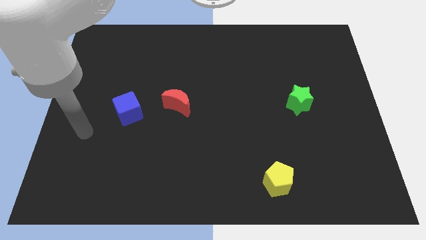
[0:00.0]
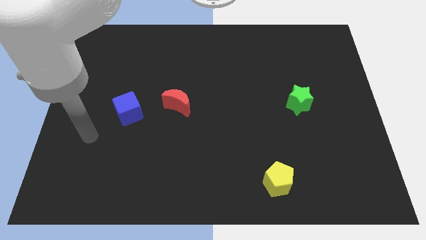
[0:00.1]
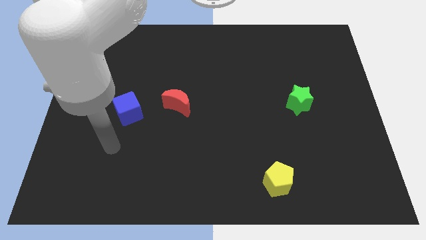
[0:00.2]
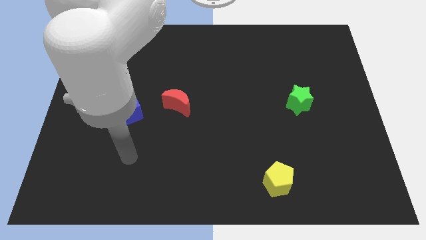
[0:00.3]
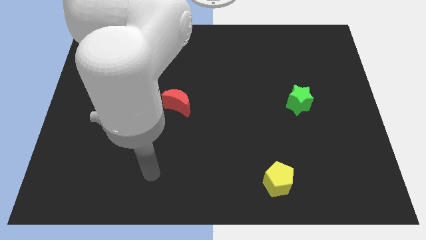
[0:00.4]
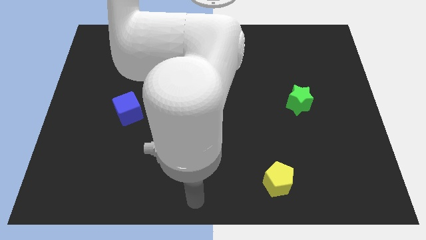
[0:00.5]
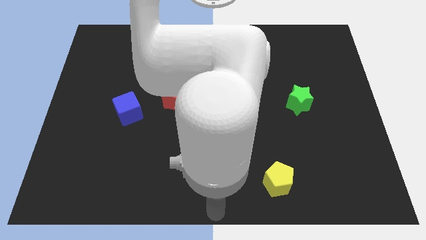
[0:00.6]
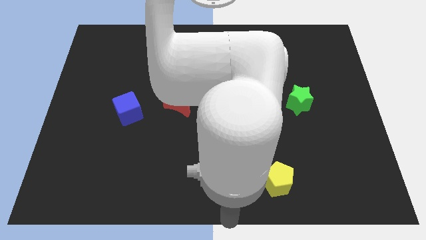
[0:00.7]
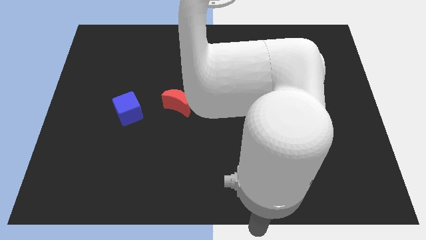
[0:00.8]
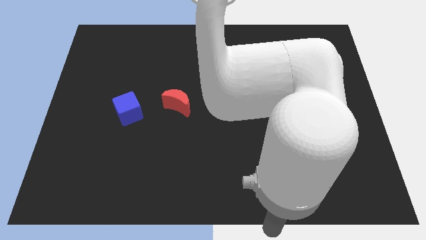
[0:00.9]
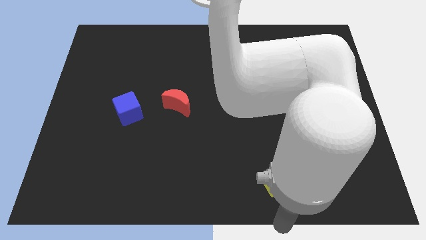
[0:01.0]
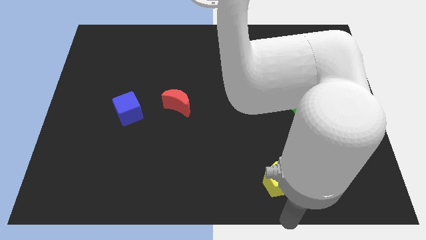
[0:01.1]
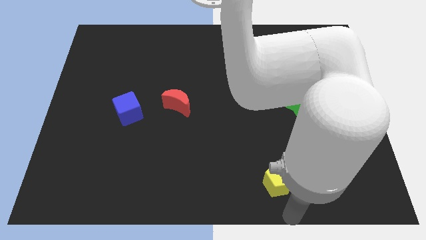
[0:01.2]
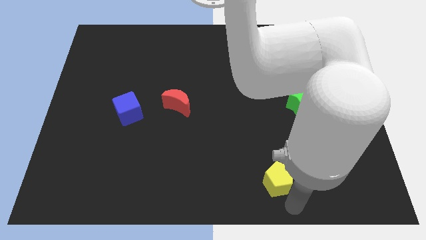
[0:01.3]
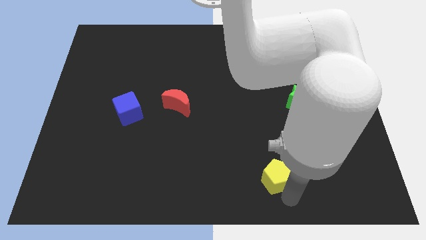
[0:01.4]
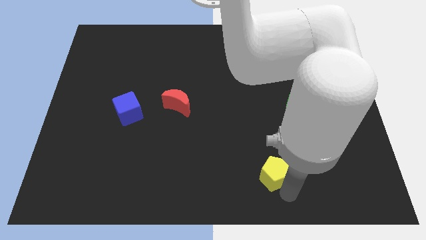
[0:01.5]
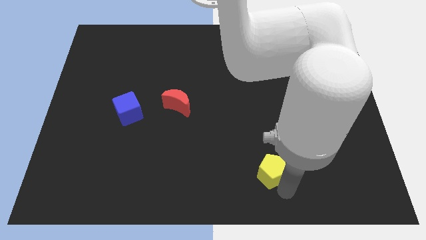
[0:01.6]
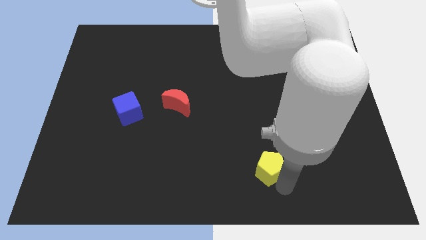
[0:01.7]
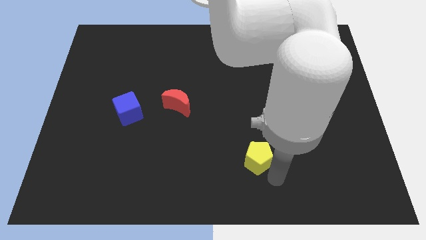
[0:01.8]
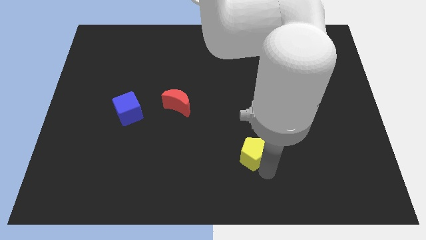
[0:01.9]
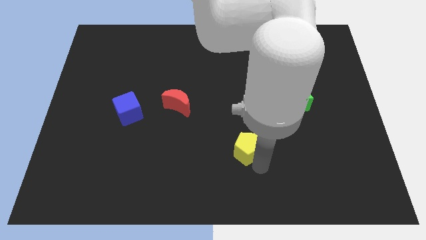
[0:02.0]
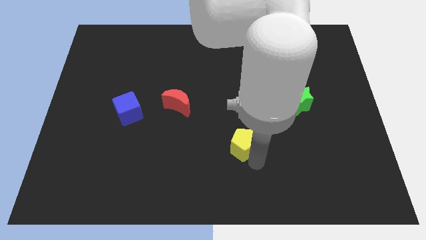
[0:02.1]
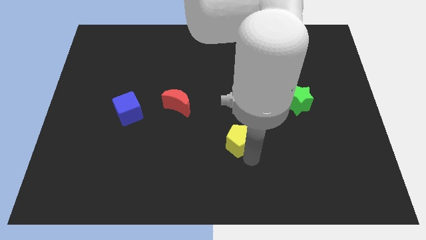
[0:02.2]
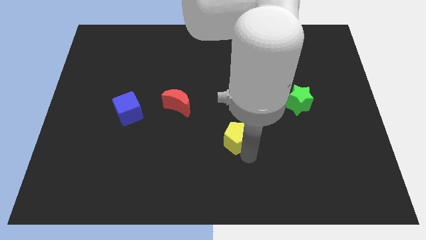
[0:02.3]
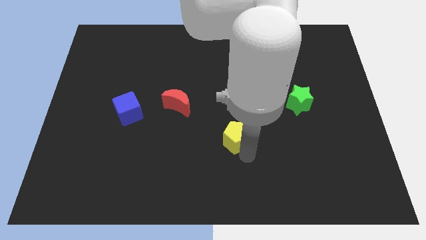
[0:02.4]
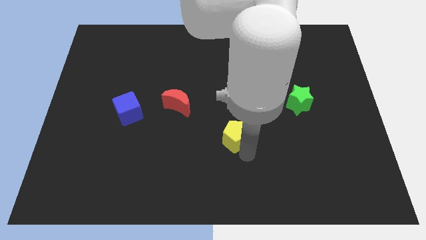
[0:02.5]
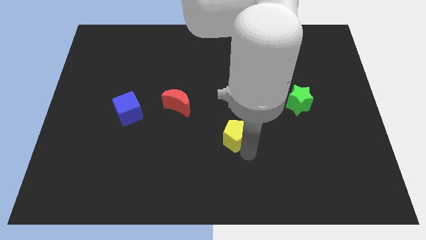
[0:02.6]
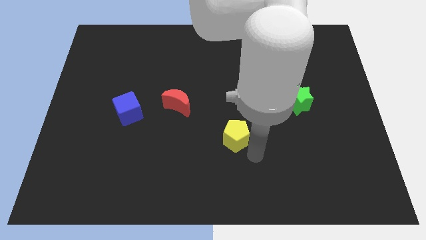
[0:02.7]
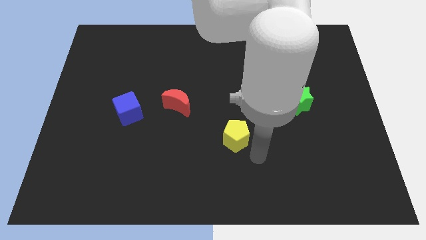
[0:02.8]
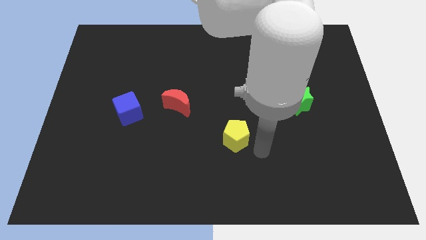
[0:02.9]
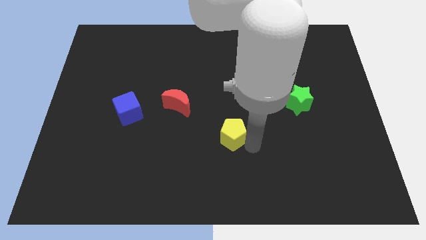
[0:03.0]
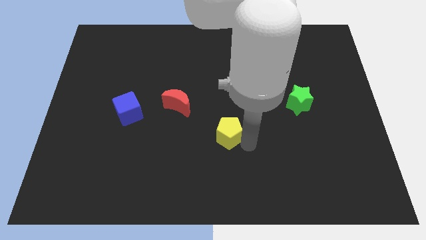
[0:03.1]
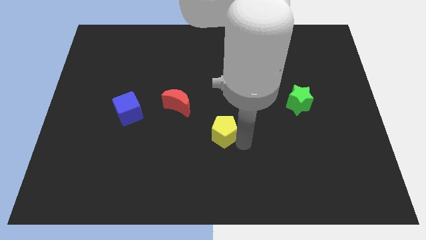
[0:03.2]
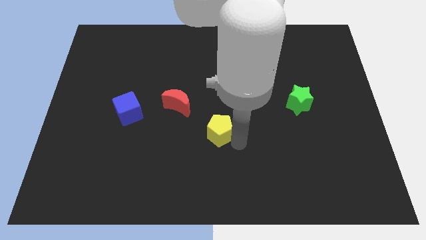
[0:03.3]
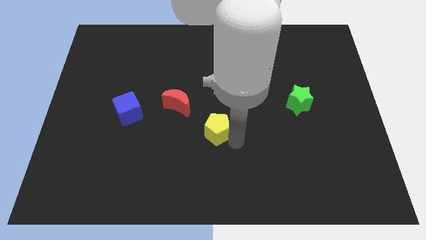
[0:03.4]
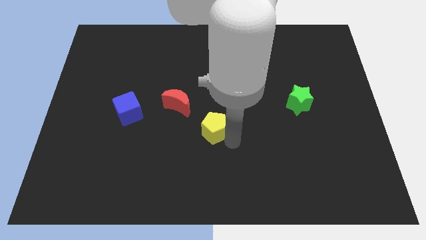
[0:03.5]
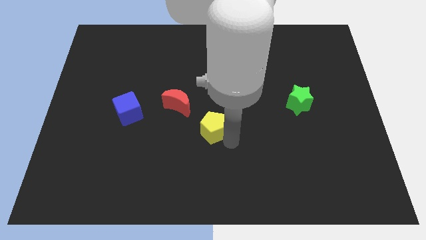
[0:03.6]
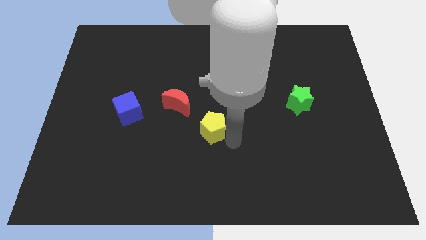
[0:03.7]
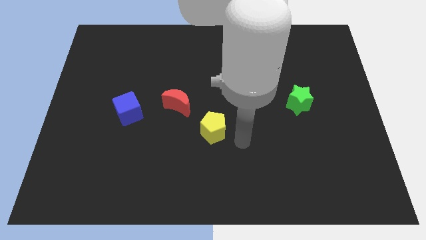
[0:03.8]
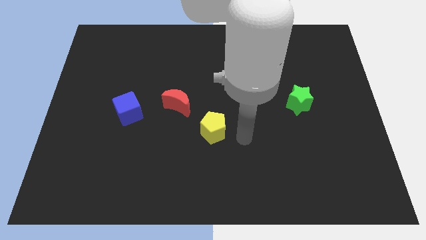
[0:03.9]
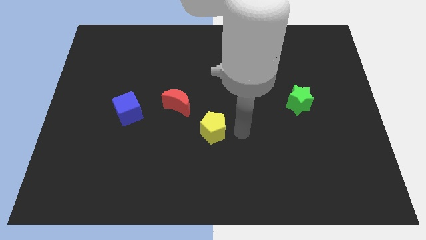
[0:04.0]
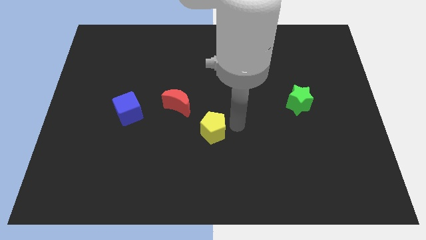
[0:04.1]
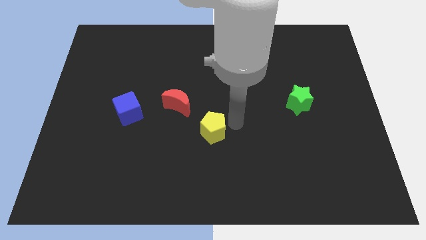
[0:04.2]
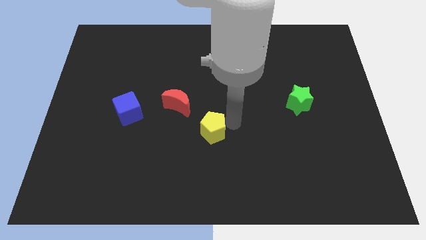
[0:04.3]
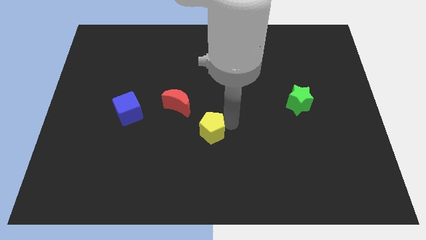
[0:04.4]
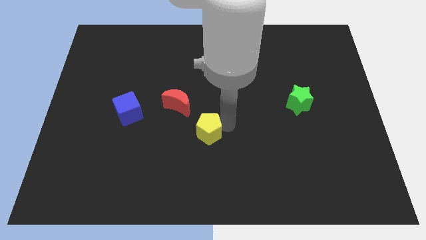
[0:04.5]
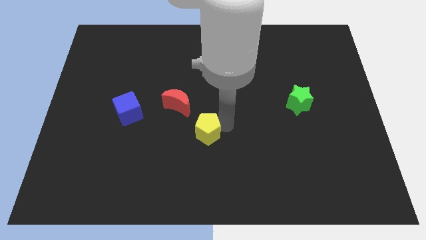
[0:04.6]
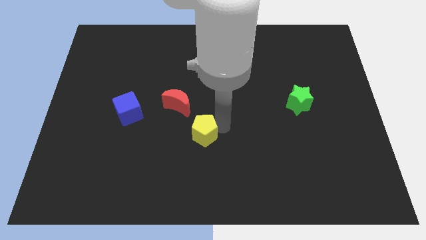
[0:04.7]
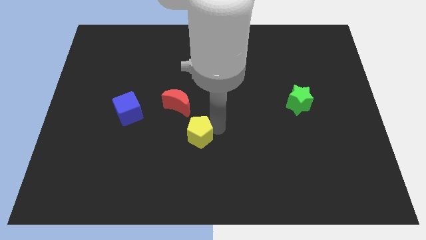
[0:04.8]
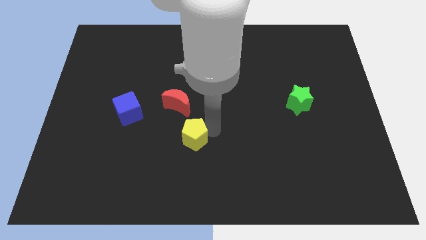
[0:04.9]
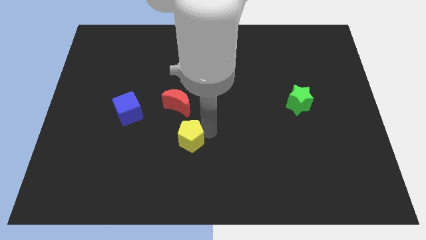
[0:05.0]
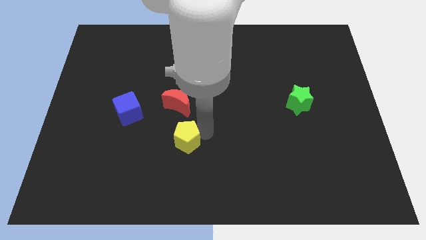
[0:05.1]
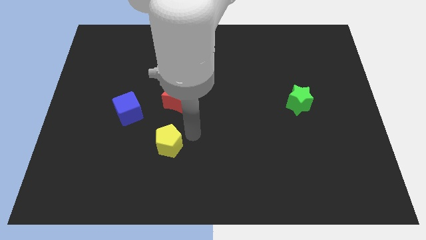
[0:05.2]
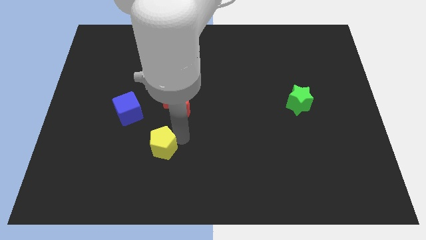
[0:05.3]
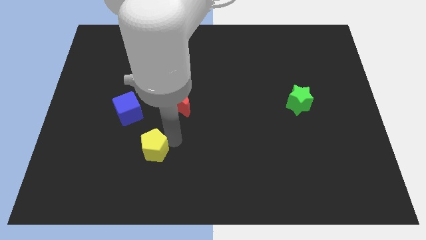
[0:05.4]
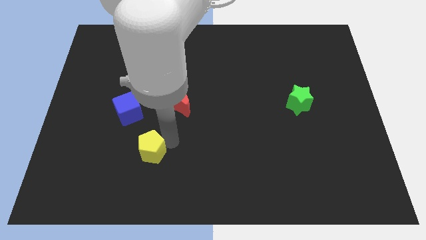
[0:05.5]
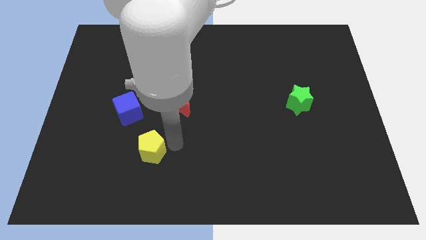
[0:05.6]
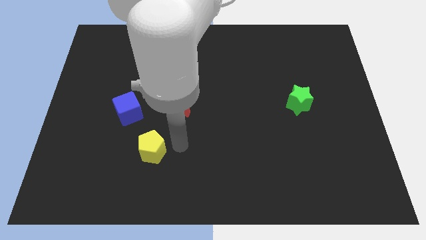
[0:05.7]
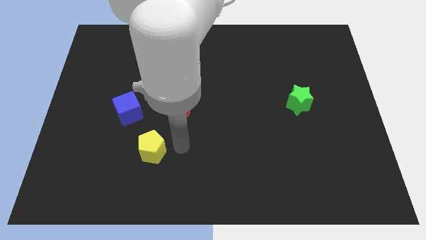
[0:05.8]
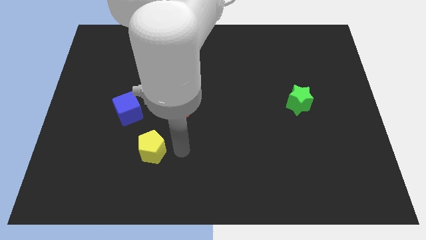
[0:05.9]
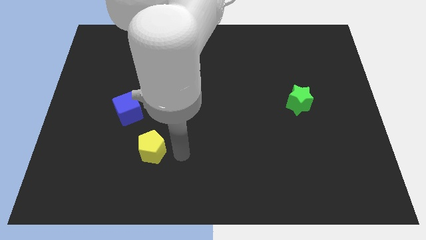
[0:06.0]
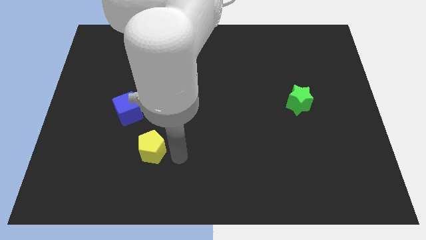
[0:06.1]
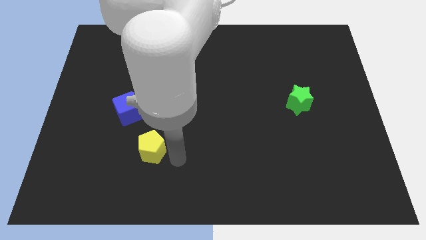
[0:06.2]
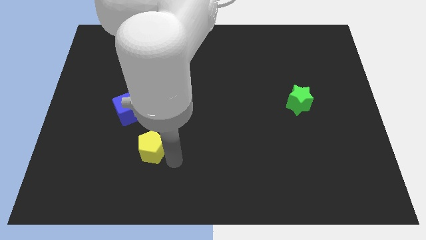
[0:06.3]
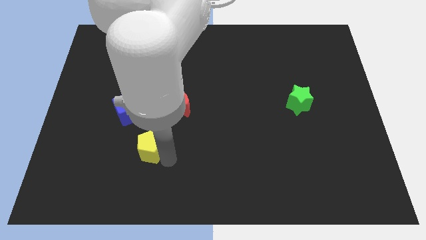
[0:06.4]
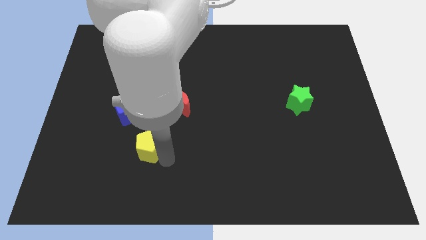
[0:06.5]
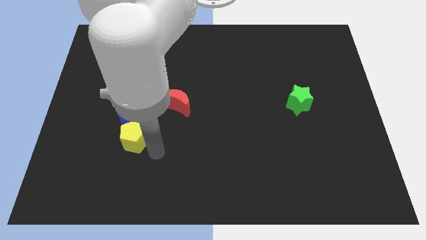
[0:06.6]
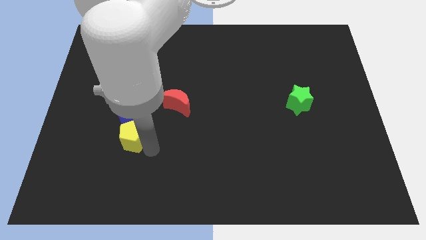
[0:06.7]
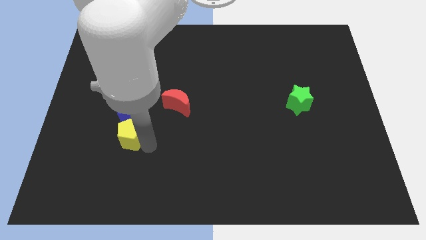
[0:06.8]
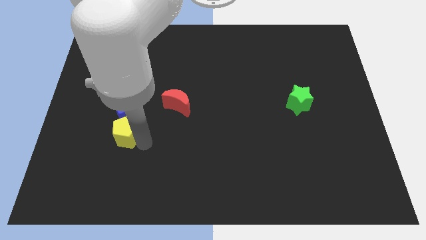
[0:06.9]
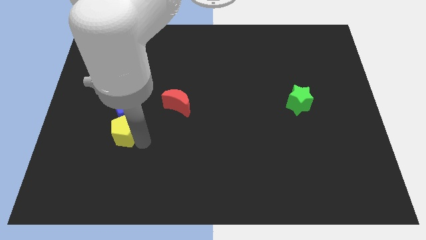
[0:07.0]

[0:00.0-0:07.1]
slide the yellow block close to the blue cube

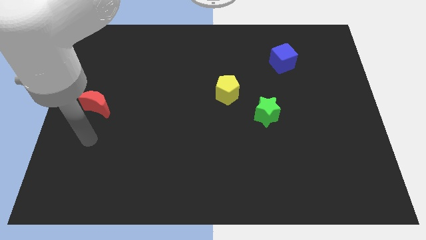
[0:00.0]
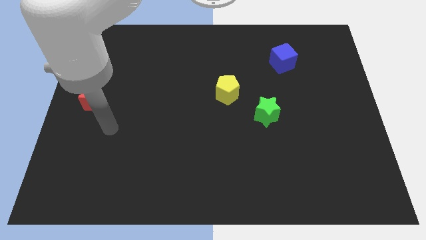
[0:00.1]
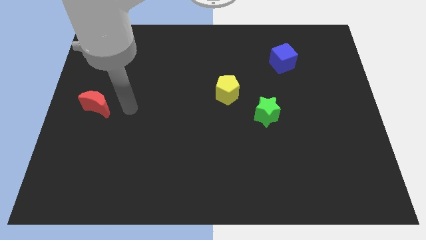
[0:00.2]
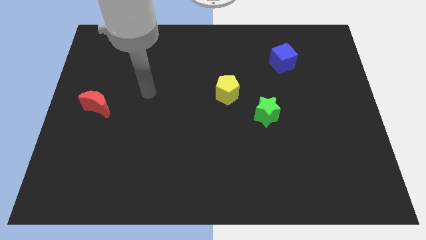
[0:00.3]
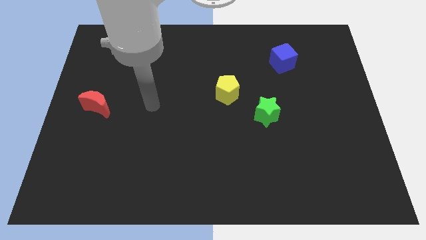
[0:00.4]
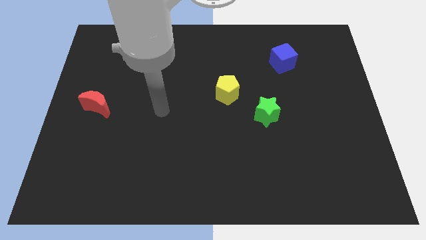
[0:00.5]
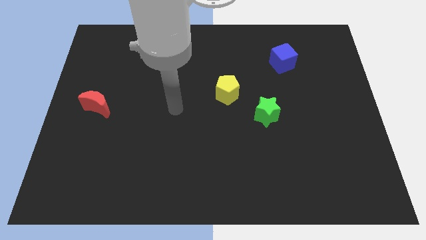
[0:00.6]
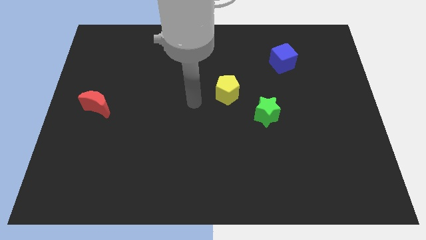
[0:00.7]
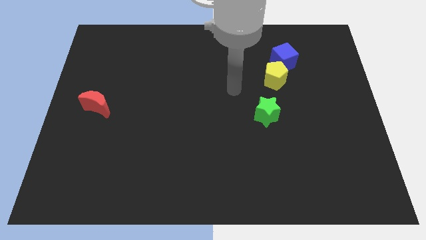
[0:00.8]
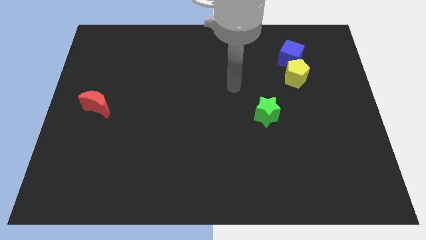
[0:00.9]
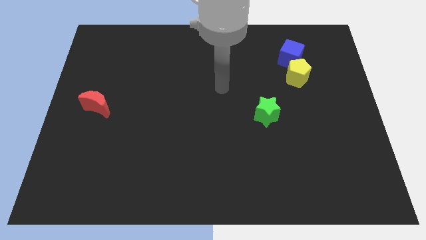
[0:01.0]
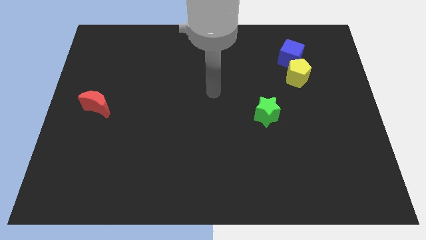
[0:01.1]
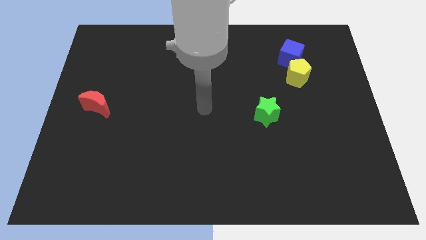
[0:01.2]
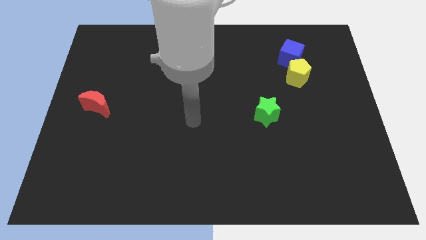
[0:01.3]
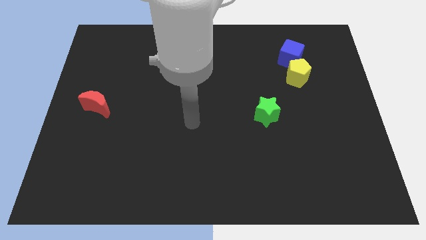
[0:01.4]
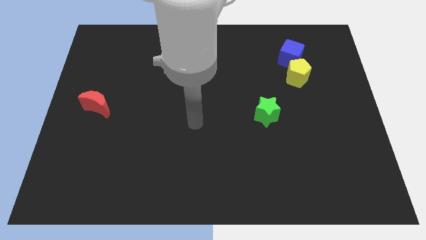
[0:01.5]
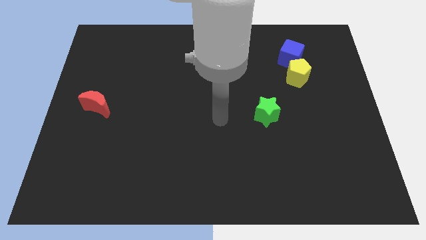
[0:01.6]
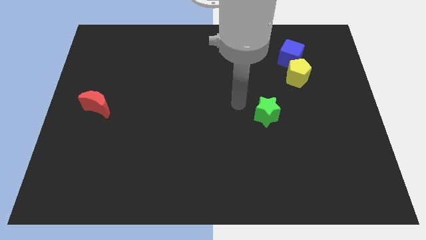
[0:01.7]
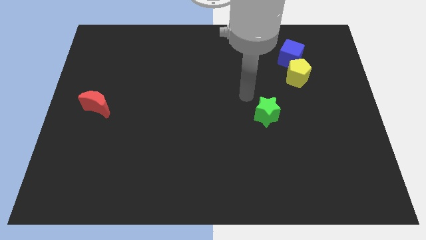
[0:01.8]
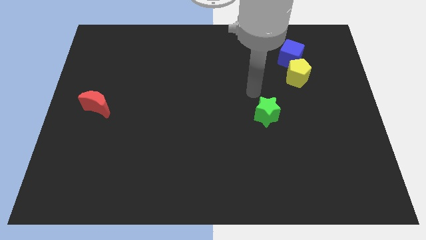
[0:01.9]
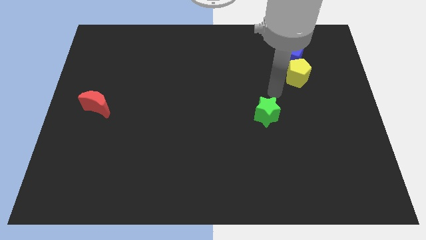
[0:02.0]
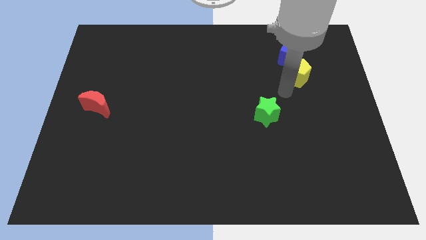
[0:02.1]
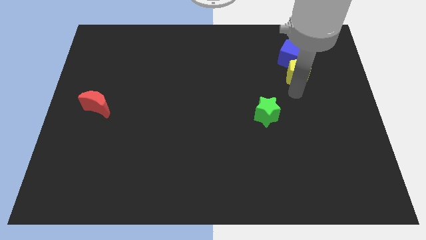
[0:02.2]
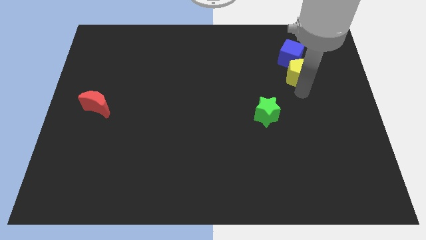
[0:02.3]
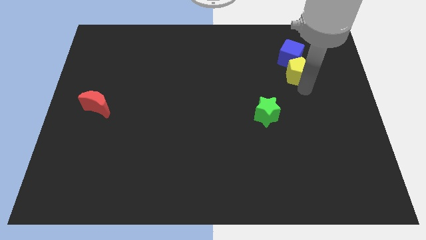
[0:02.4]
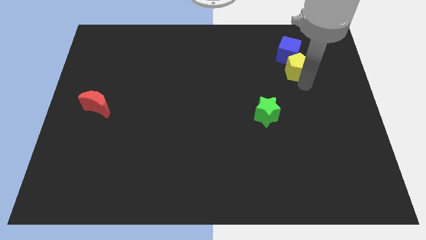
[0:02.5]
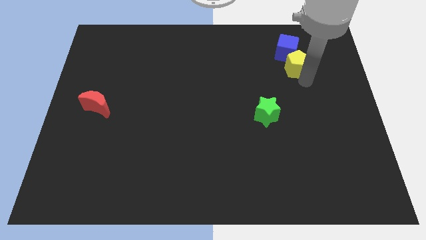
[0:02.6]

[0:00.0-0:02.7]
slide the pentagon next to the blue block
